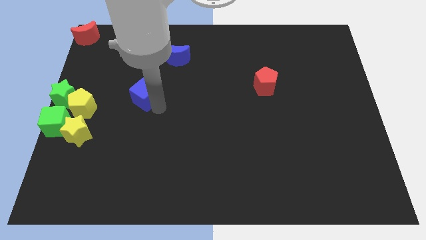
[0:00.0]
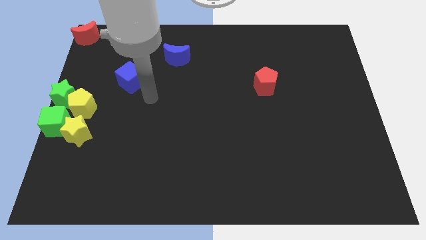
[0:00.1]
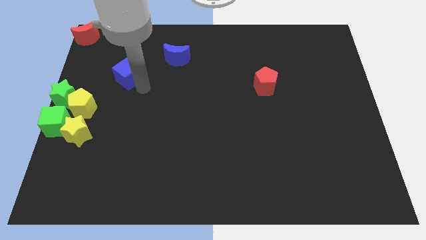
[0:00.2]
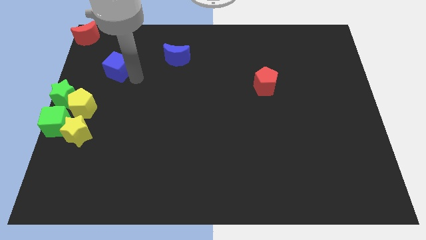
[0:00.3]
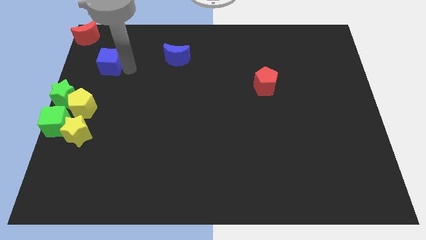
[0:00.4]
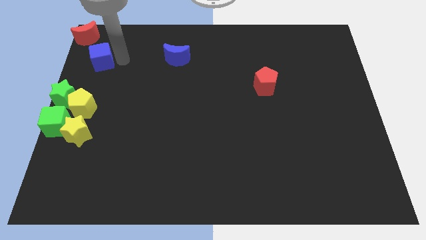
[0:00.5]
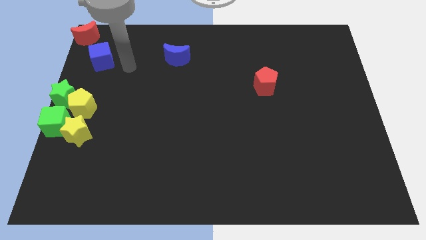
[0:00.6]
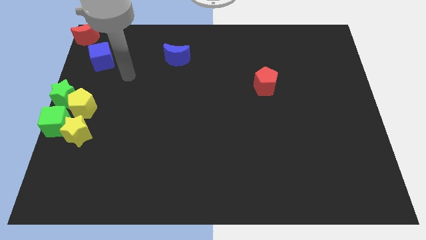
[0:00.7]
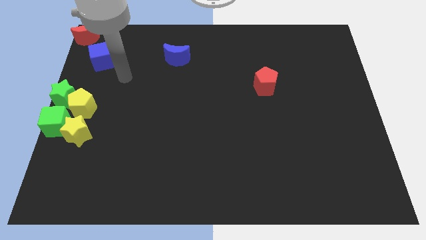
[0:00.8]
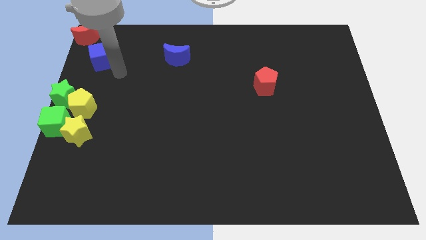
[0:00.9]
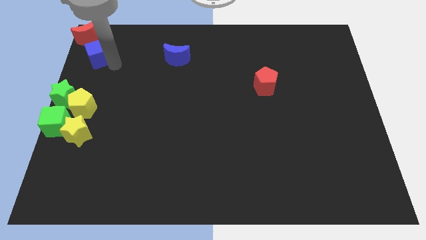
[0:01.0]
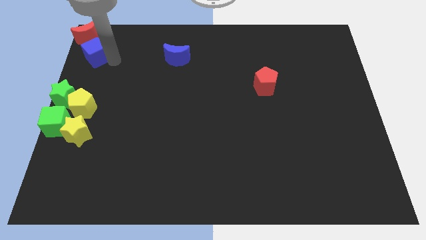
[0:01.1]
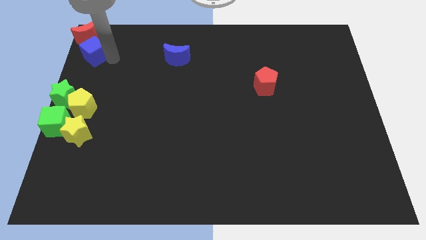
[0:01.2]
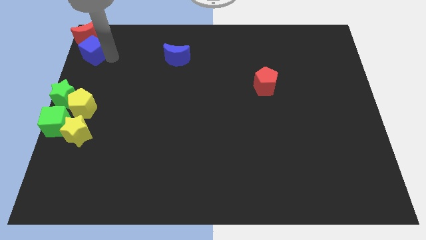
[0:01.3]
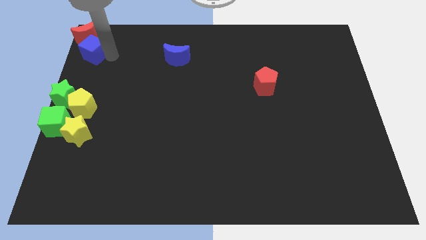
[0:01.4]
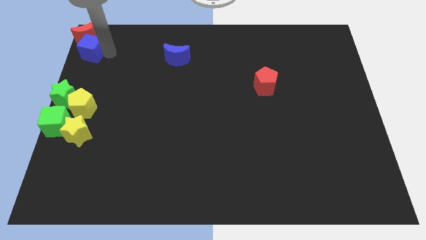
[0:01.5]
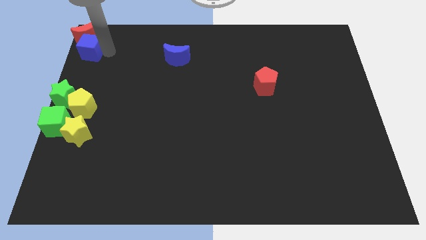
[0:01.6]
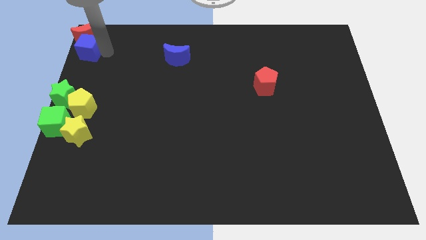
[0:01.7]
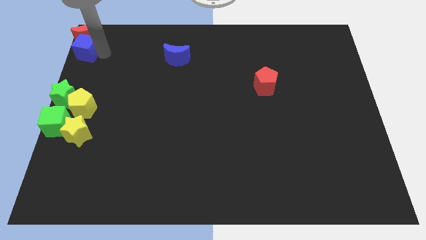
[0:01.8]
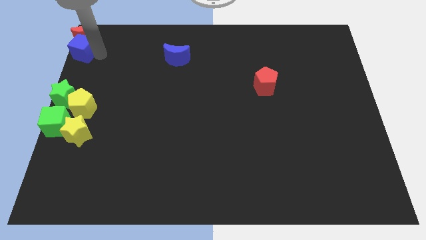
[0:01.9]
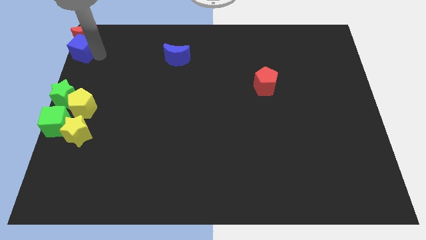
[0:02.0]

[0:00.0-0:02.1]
place the blue cube below the red crescent

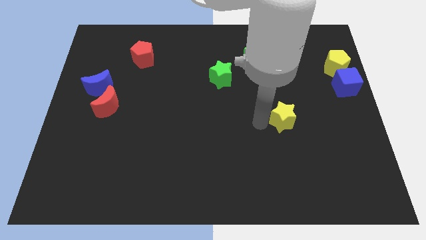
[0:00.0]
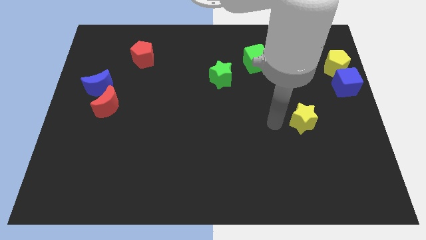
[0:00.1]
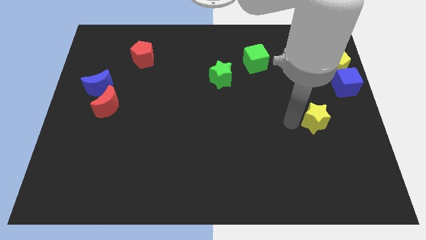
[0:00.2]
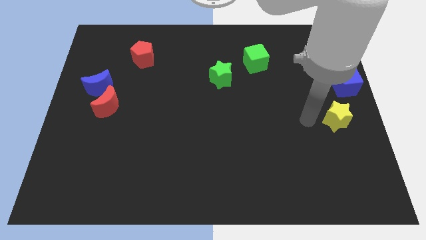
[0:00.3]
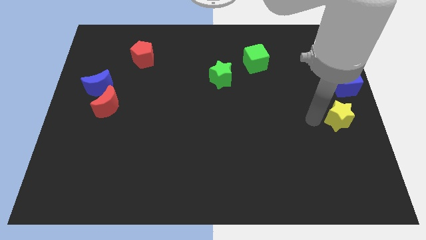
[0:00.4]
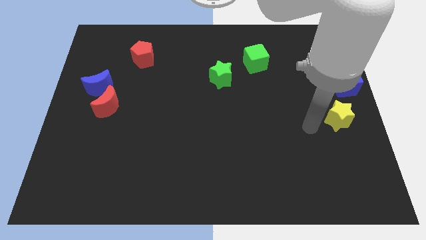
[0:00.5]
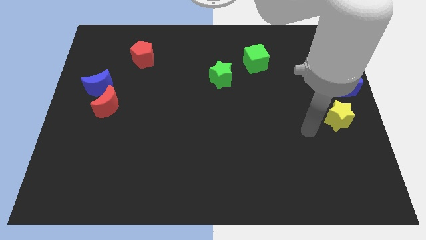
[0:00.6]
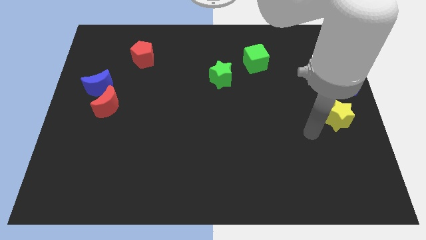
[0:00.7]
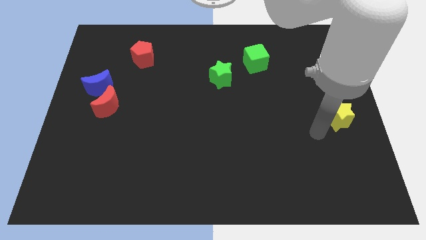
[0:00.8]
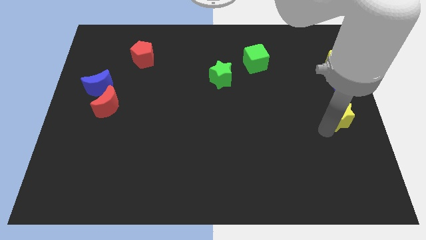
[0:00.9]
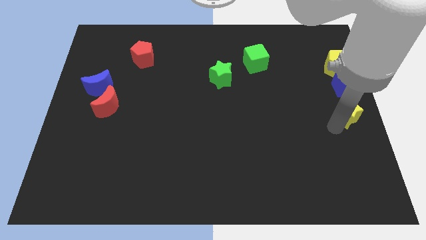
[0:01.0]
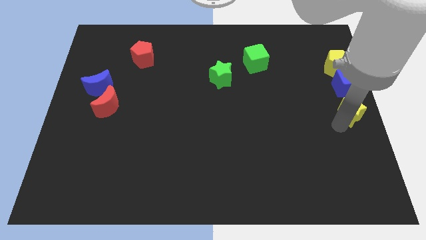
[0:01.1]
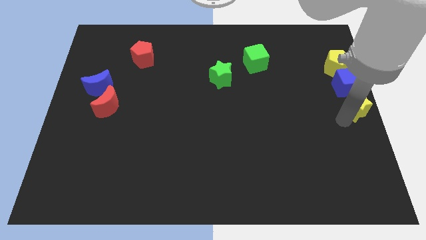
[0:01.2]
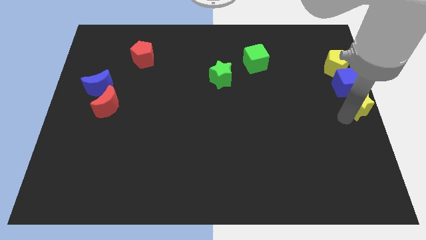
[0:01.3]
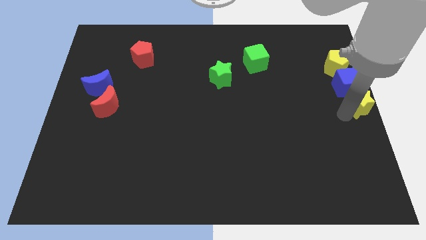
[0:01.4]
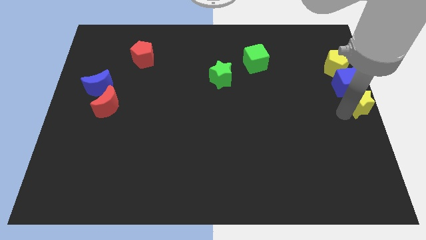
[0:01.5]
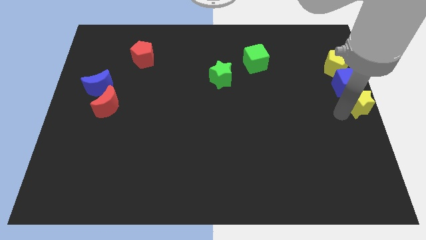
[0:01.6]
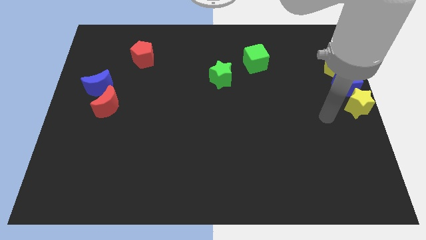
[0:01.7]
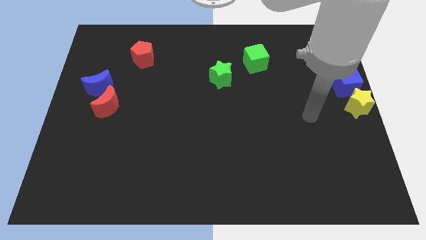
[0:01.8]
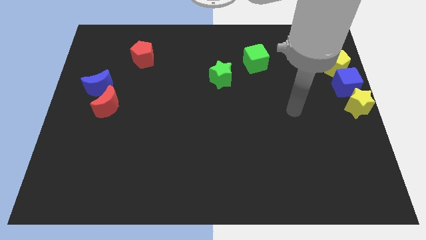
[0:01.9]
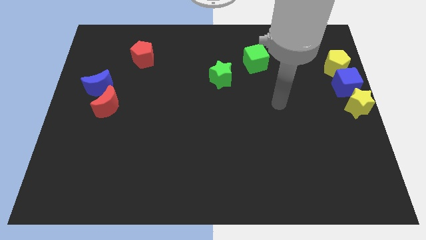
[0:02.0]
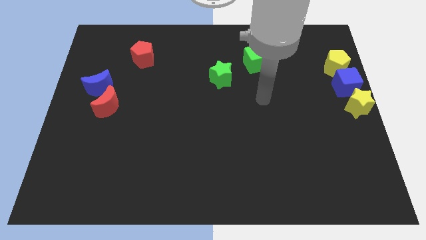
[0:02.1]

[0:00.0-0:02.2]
place the yellow star below the blue cube to form a vertical line

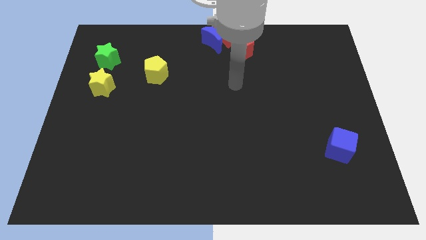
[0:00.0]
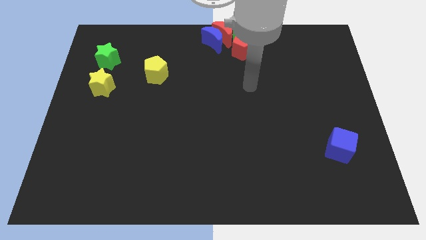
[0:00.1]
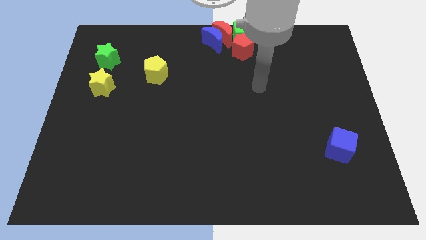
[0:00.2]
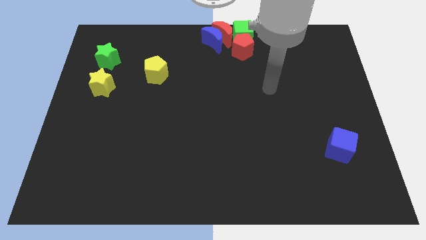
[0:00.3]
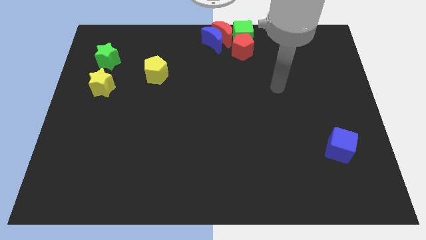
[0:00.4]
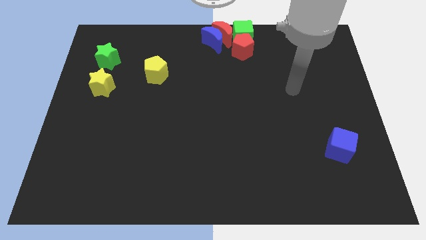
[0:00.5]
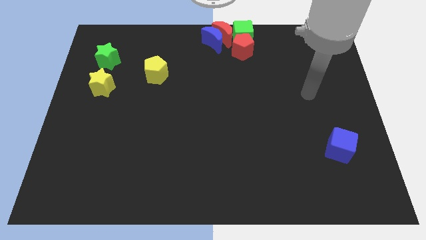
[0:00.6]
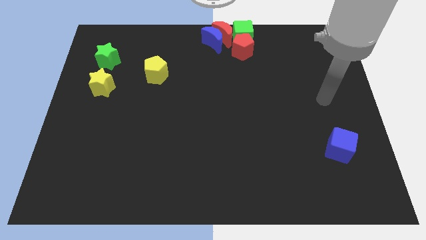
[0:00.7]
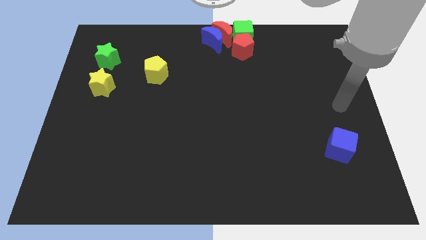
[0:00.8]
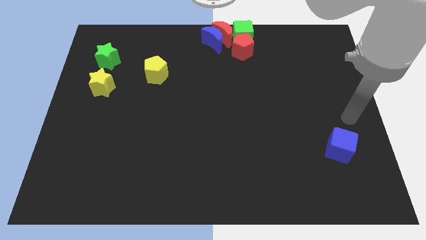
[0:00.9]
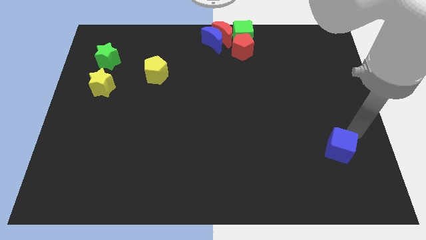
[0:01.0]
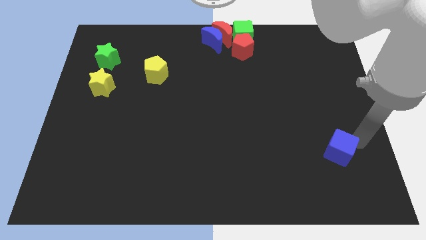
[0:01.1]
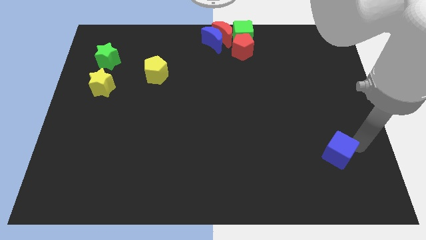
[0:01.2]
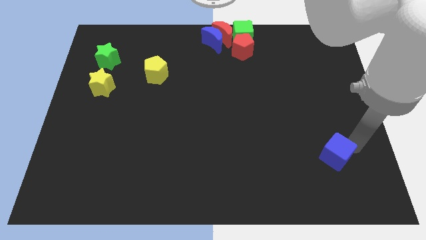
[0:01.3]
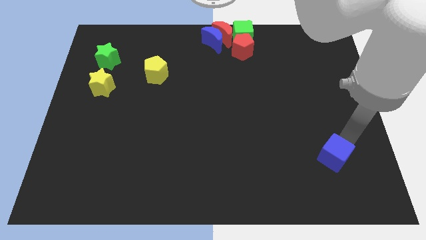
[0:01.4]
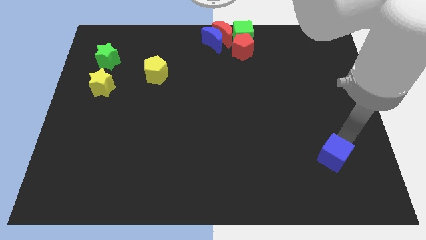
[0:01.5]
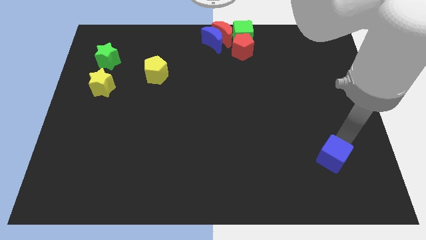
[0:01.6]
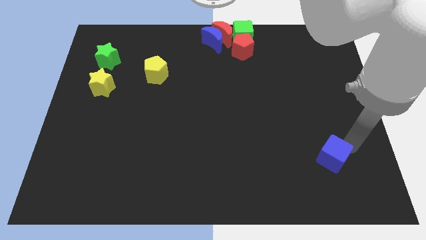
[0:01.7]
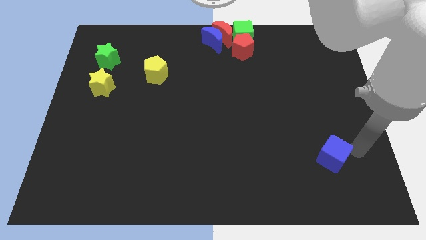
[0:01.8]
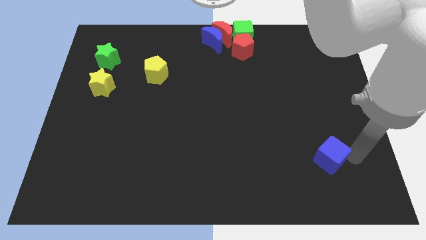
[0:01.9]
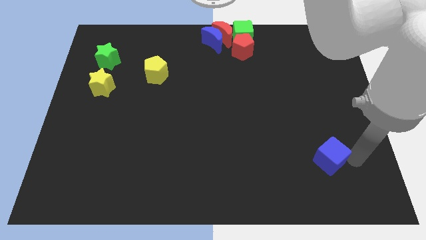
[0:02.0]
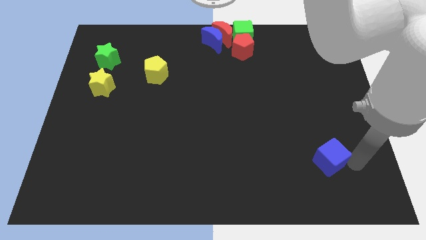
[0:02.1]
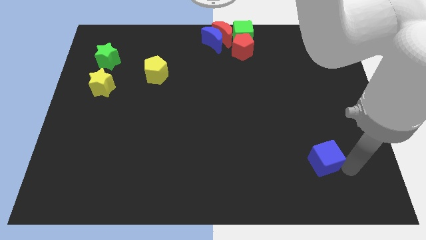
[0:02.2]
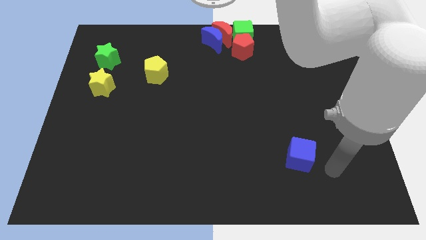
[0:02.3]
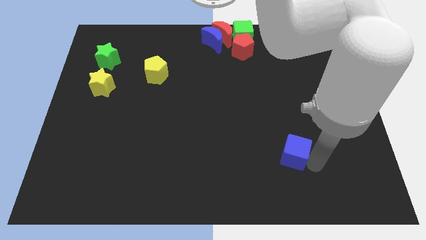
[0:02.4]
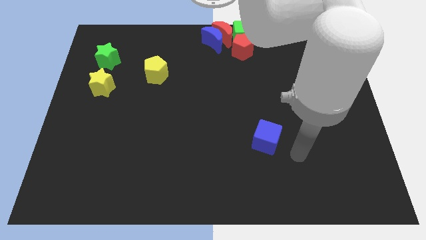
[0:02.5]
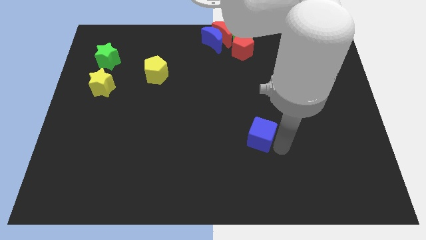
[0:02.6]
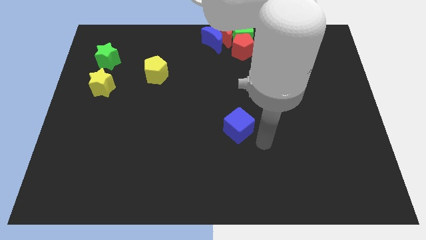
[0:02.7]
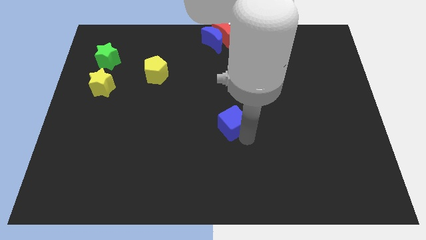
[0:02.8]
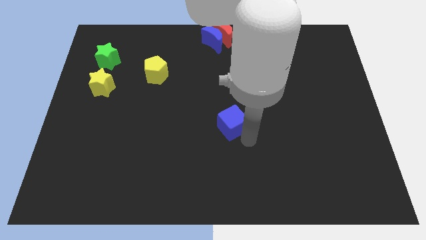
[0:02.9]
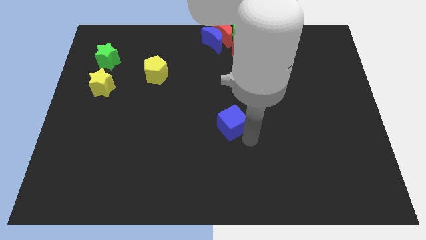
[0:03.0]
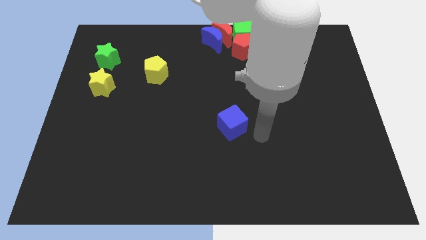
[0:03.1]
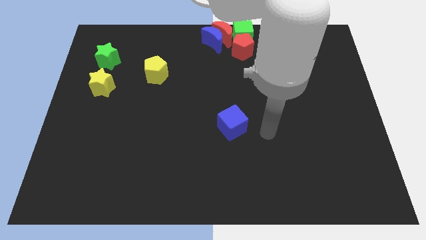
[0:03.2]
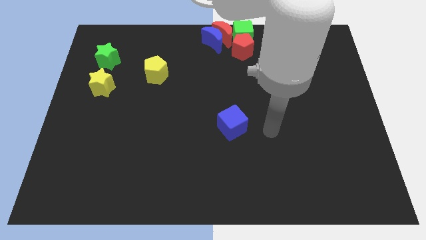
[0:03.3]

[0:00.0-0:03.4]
move the blue cube to the center of the board

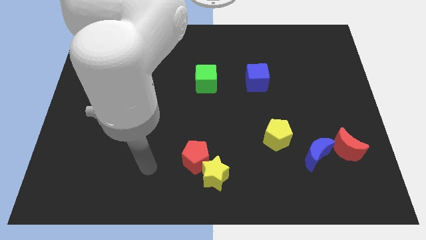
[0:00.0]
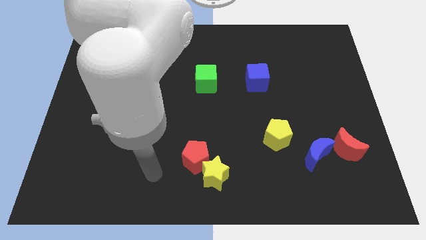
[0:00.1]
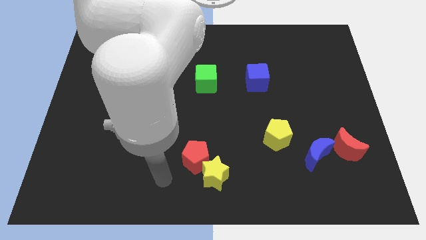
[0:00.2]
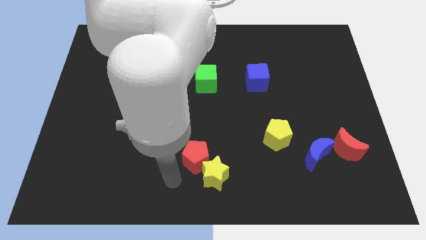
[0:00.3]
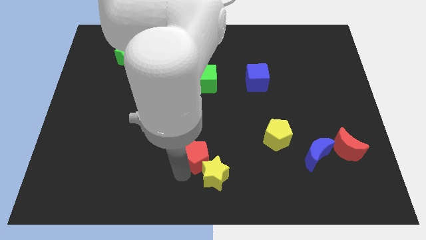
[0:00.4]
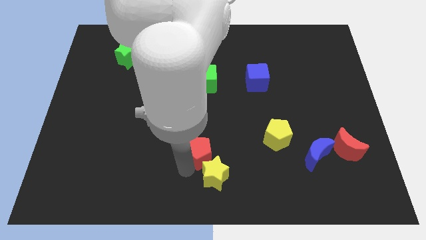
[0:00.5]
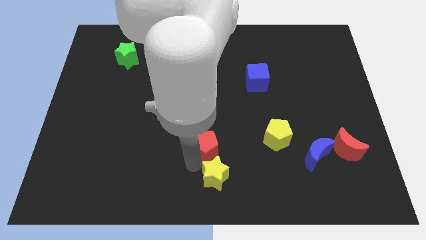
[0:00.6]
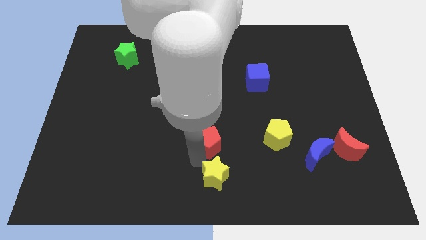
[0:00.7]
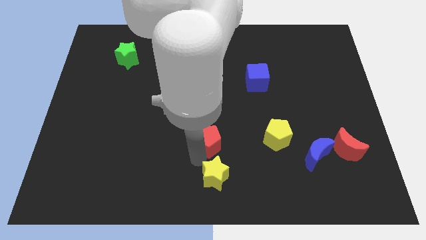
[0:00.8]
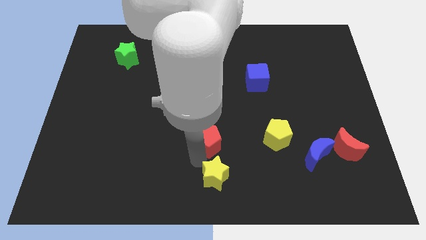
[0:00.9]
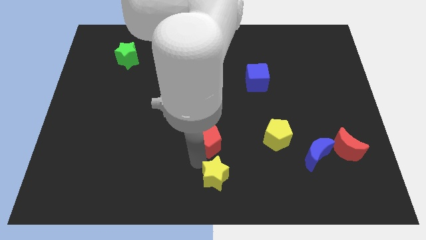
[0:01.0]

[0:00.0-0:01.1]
separate the red pentagon from the yellow star

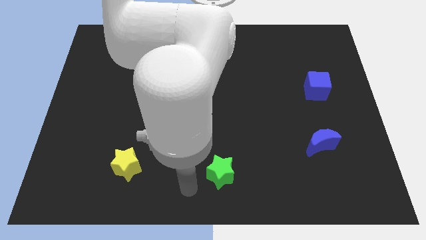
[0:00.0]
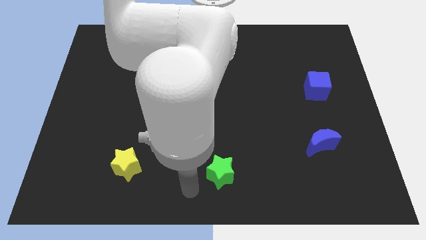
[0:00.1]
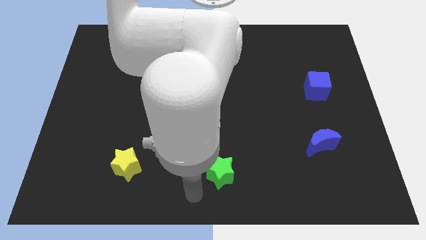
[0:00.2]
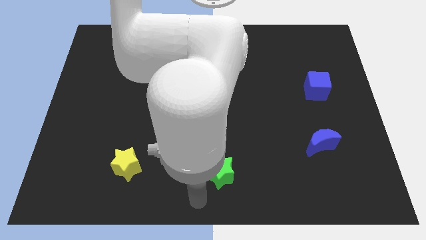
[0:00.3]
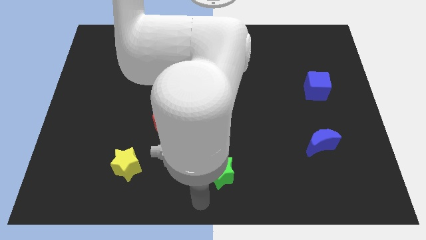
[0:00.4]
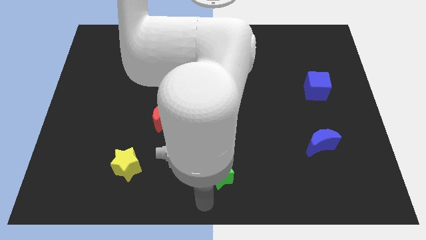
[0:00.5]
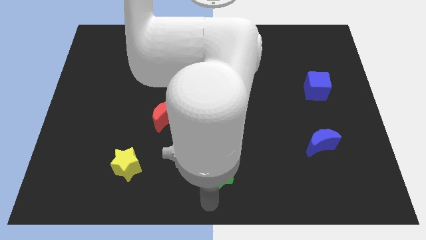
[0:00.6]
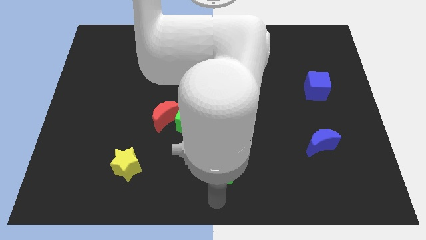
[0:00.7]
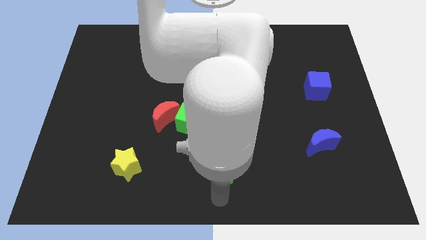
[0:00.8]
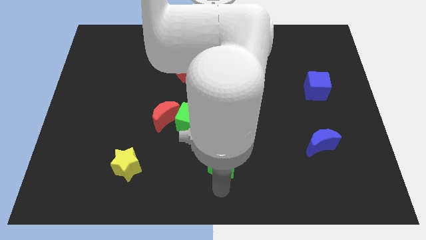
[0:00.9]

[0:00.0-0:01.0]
move near green star
